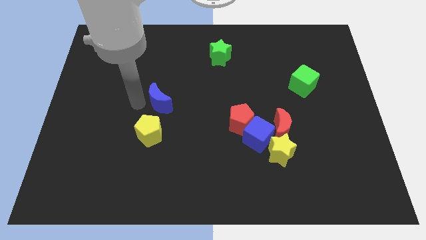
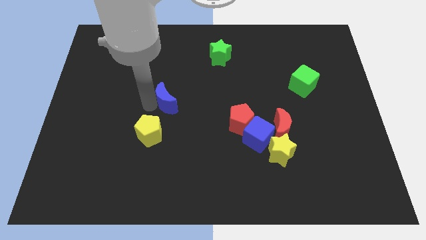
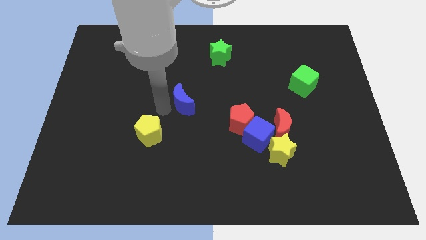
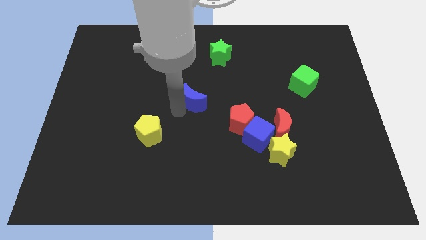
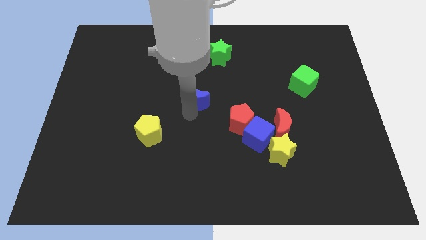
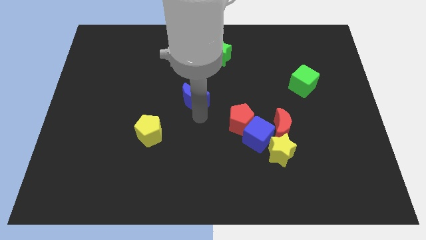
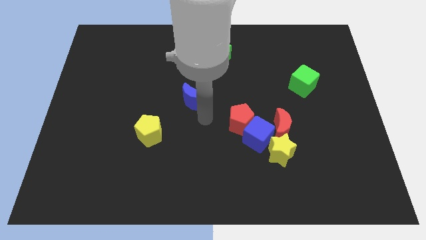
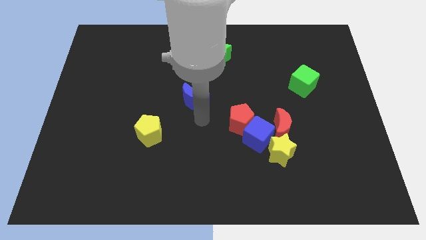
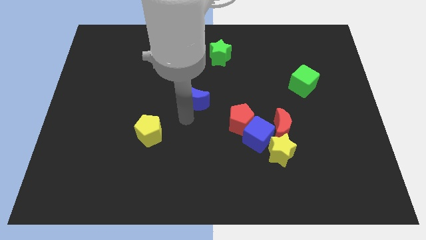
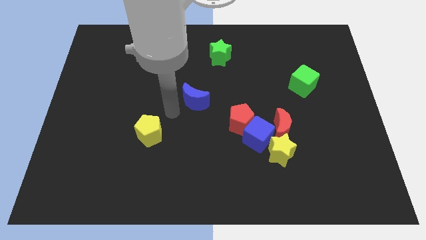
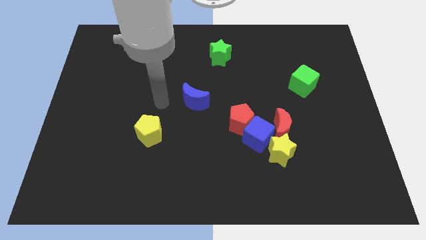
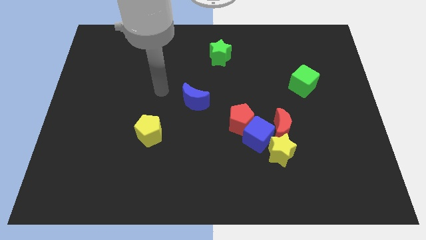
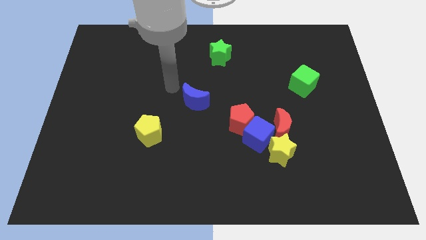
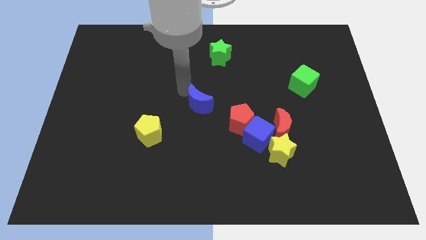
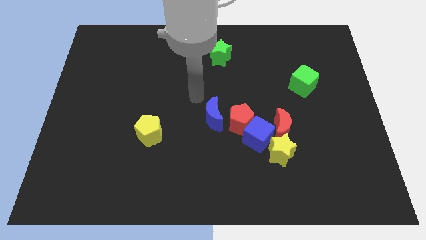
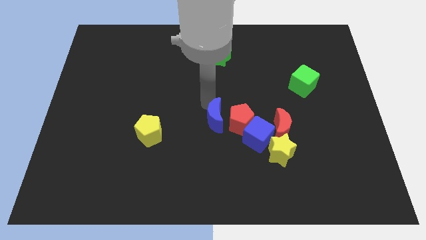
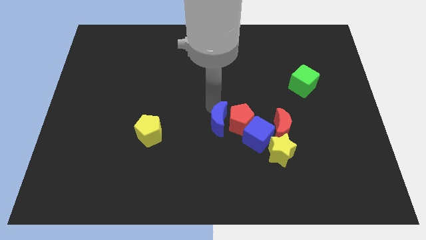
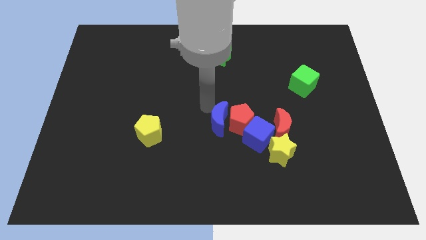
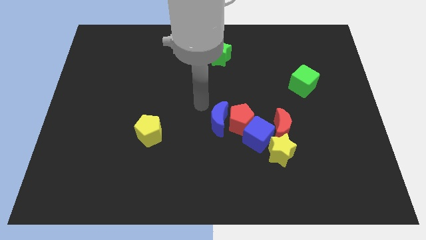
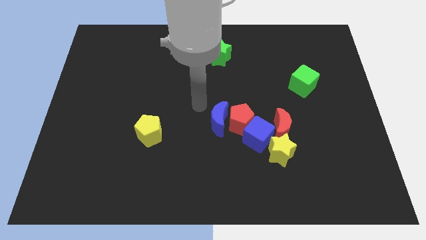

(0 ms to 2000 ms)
place the blue crescent to the left of red pentagon

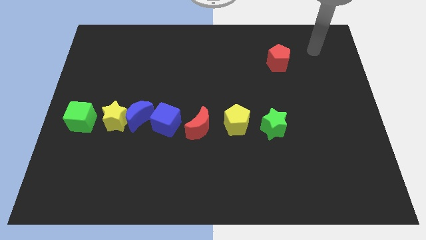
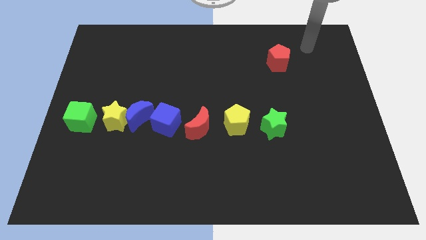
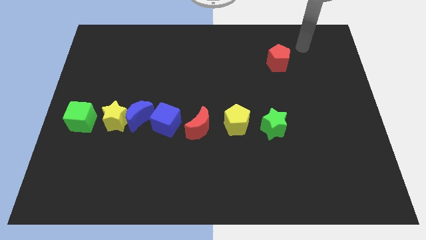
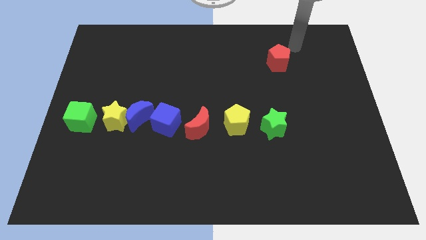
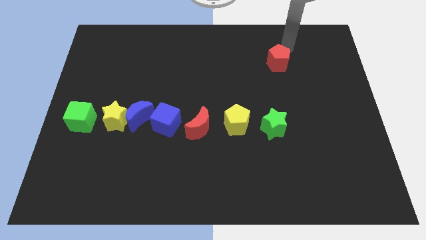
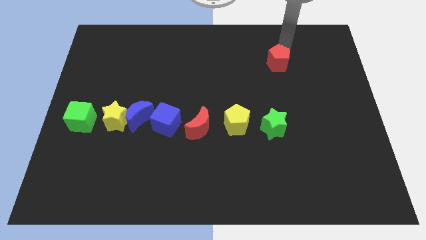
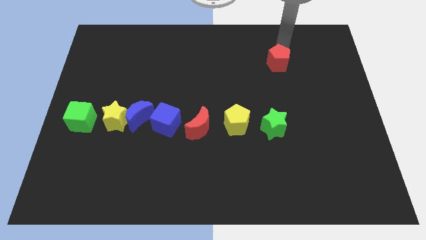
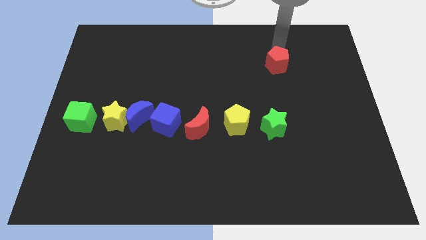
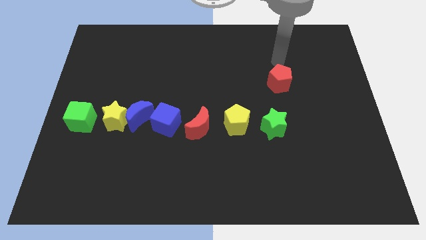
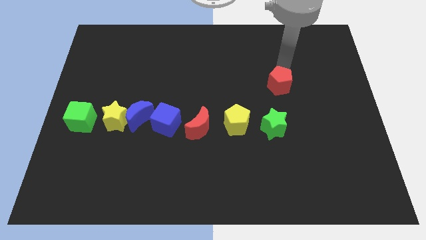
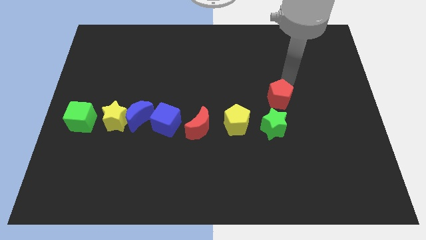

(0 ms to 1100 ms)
push red pentagon towards green star

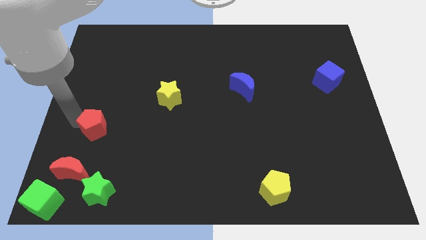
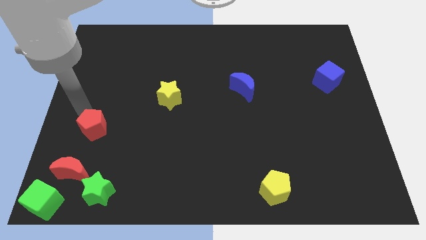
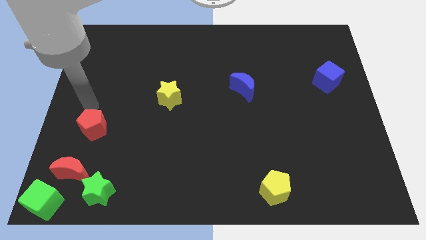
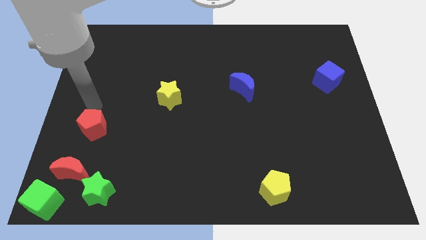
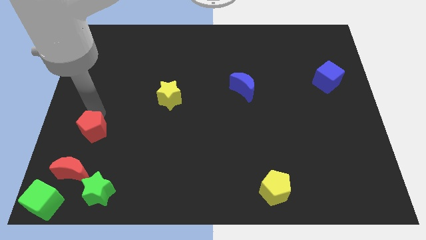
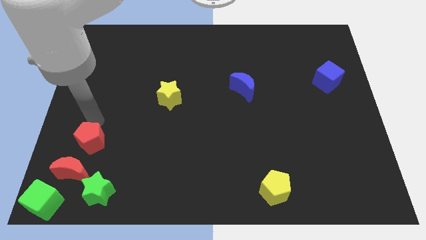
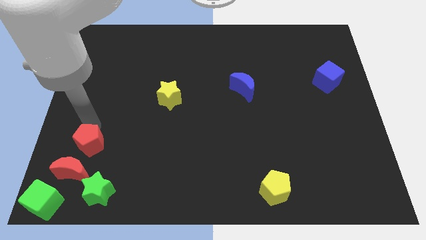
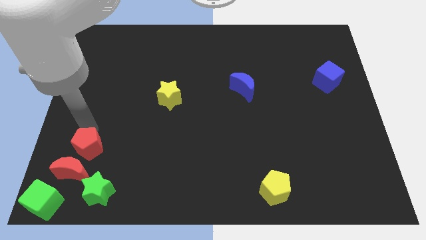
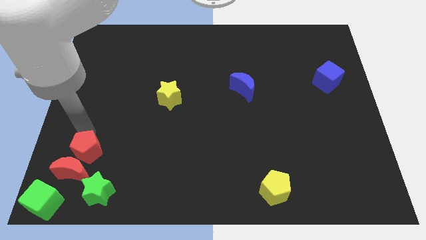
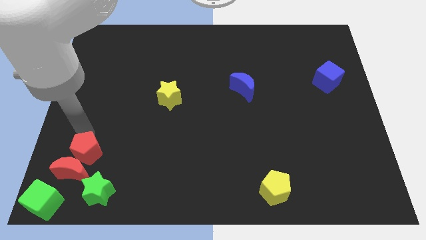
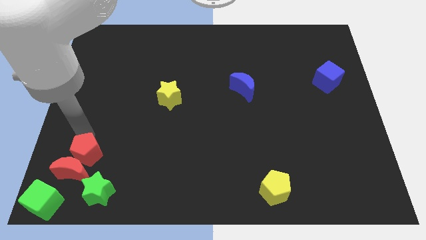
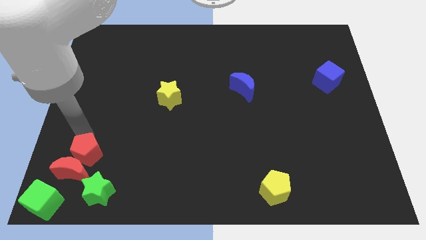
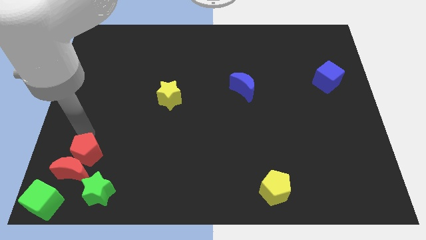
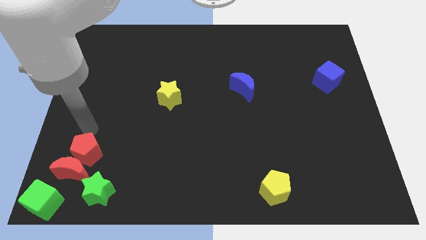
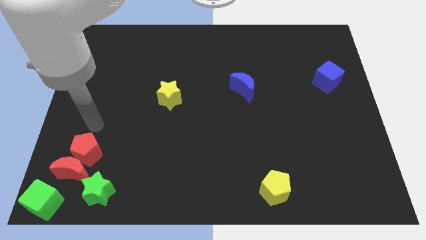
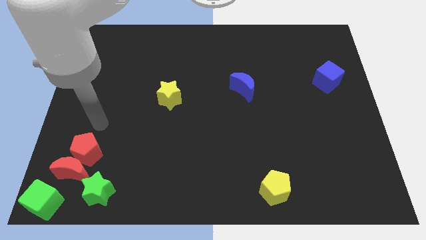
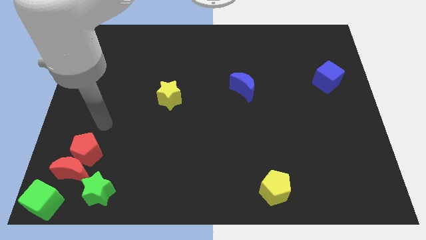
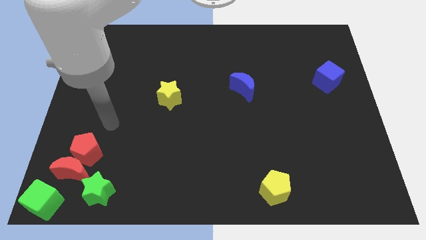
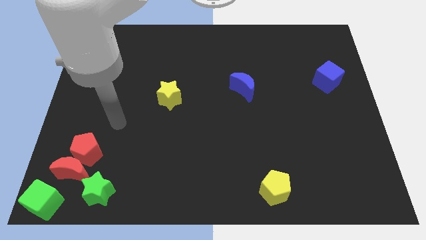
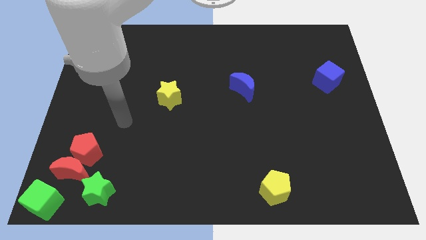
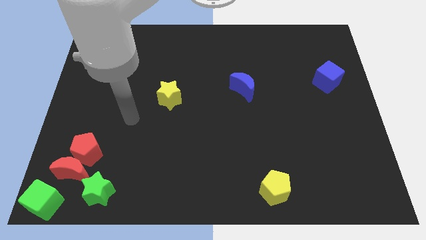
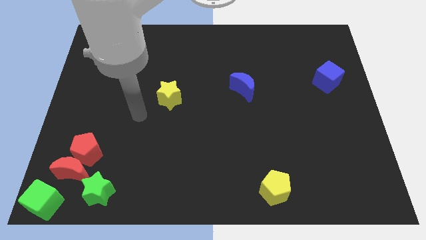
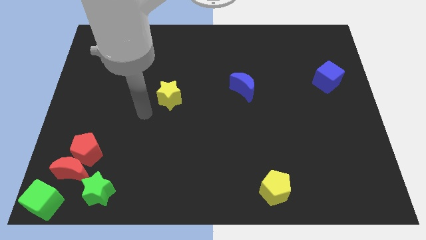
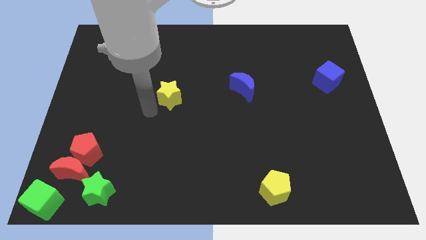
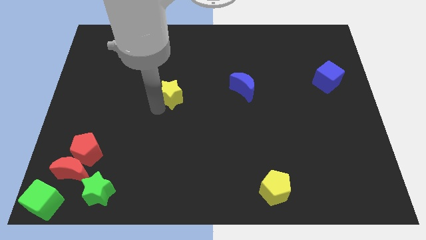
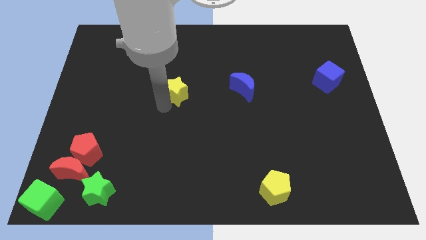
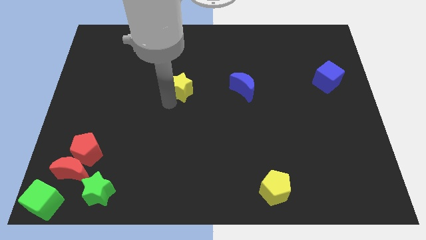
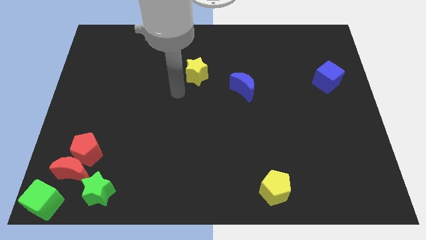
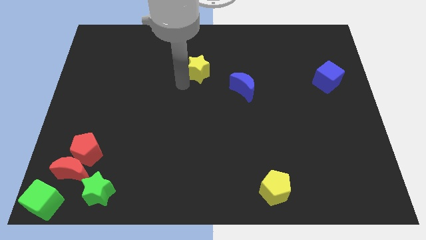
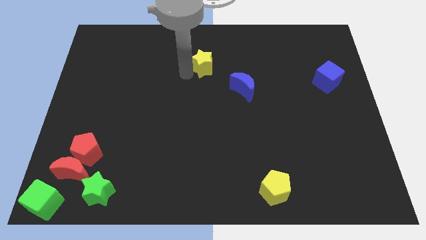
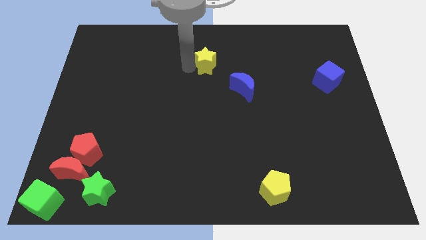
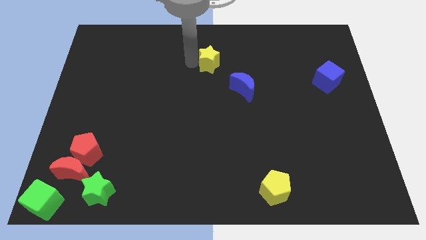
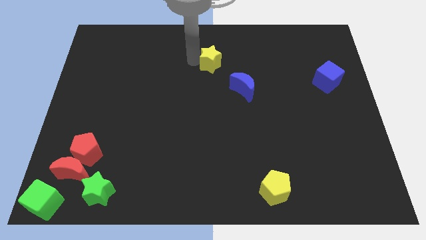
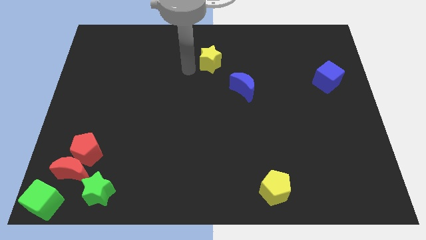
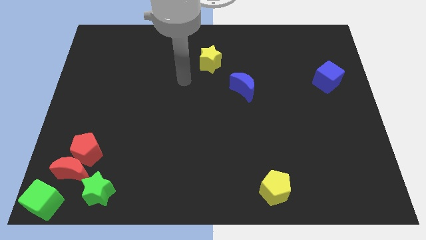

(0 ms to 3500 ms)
move yellow star to the top

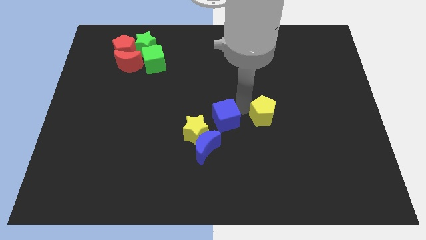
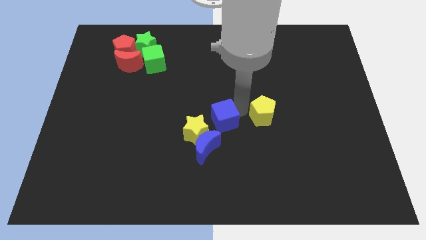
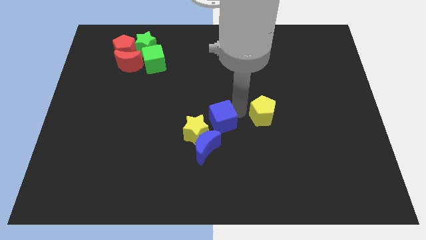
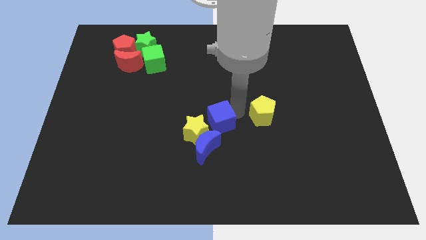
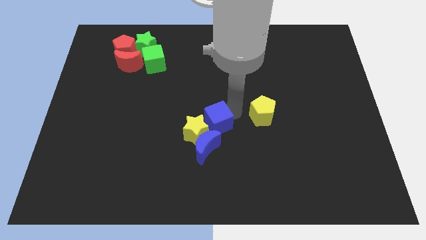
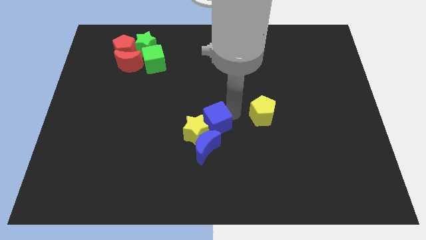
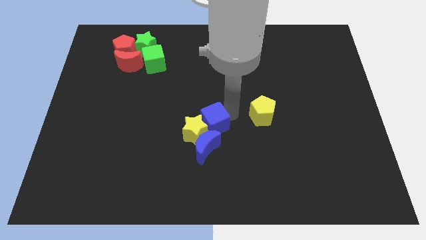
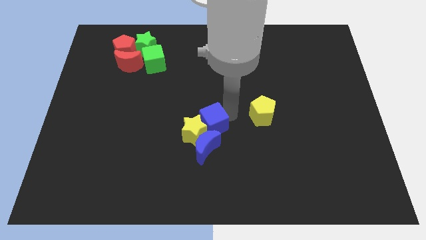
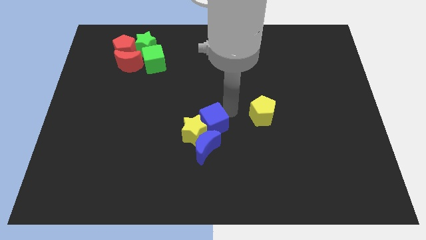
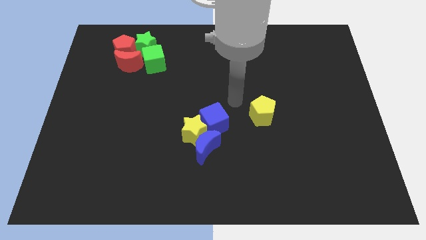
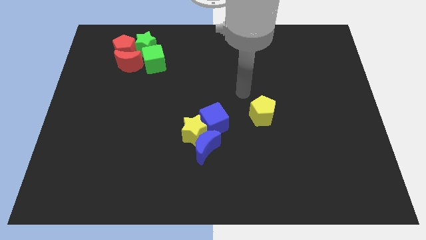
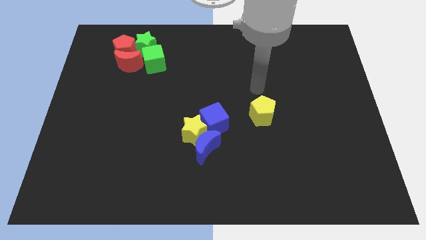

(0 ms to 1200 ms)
push the blue cube to the right of the yellow star

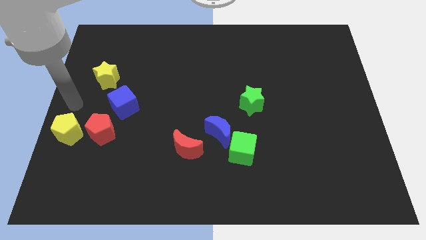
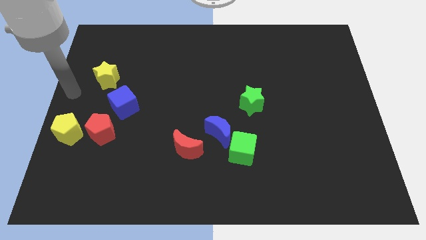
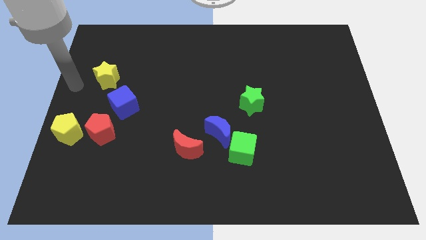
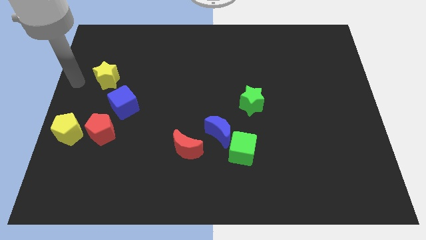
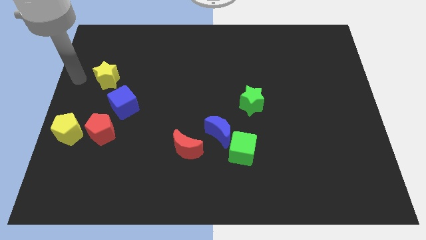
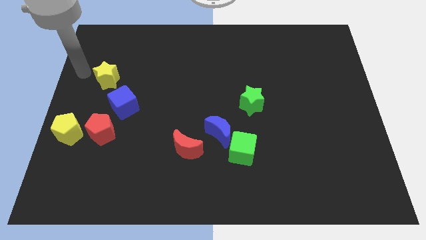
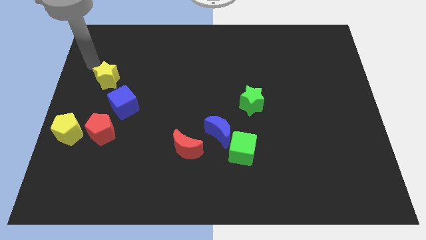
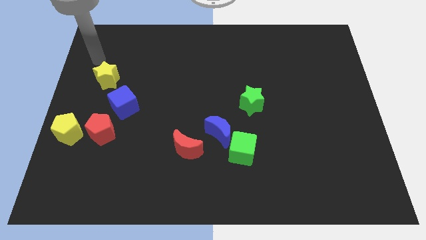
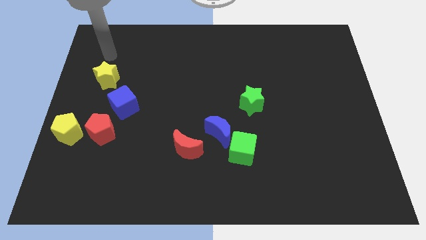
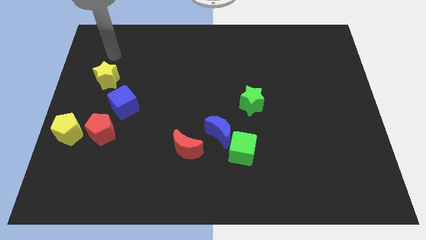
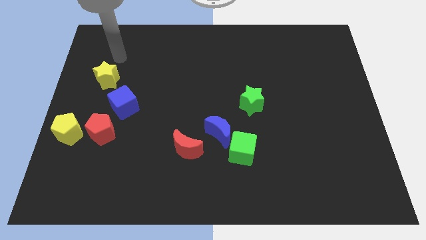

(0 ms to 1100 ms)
move your arm away from the yellow pentagon

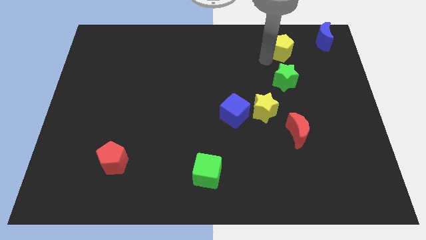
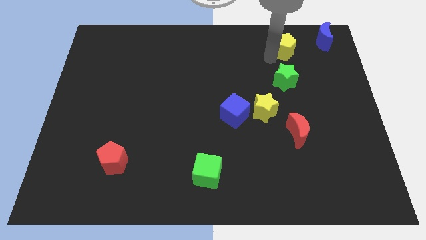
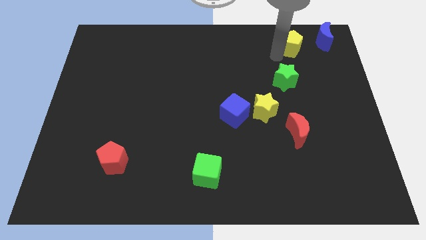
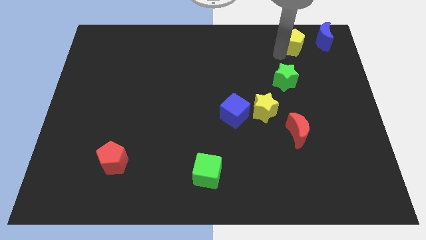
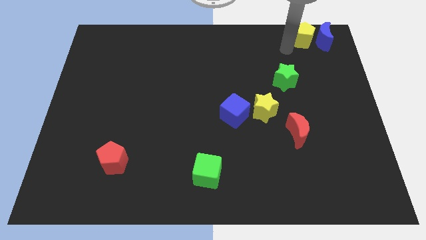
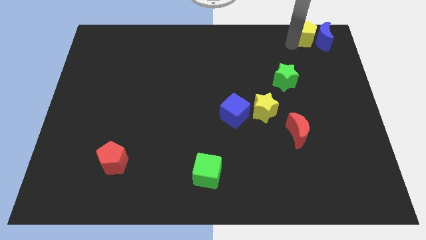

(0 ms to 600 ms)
place the yellow pentagon to the left of the blue moon
